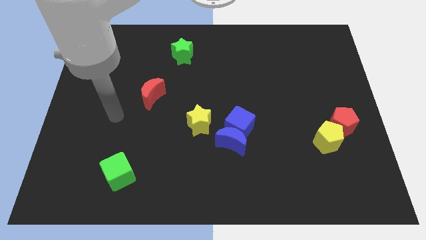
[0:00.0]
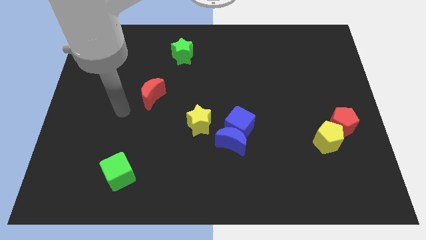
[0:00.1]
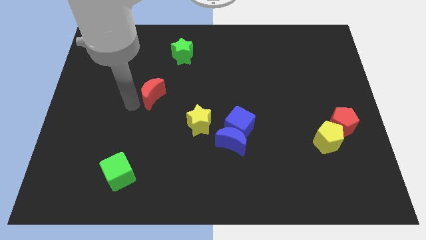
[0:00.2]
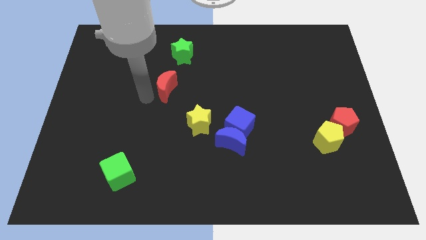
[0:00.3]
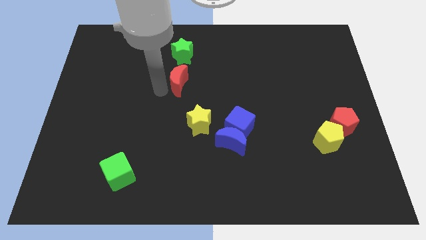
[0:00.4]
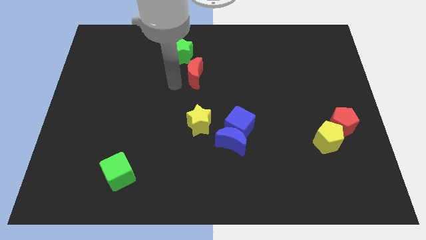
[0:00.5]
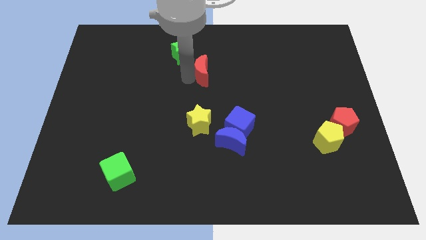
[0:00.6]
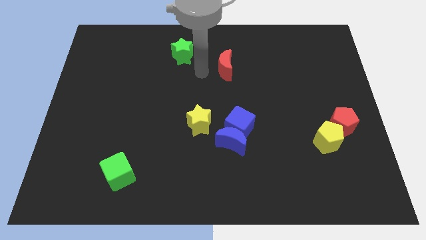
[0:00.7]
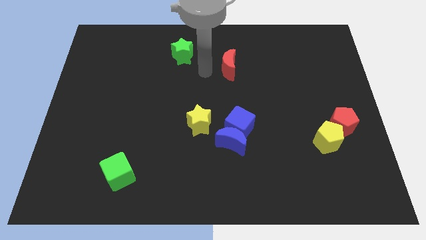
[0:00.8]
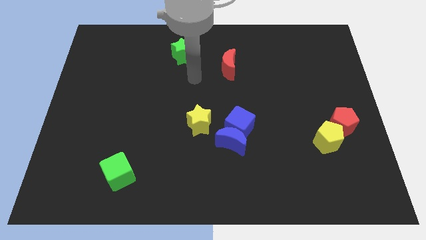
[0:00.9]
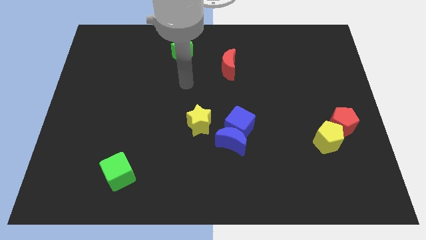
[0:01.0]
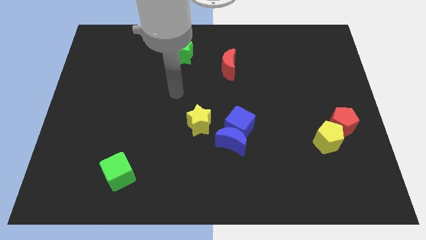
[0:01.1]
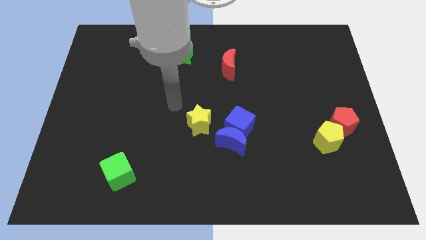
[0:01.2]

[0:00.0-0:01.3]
move the red crescent to the top of the blue cube

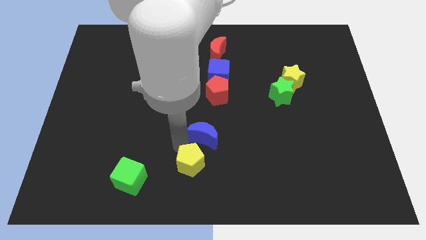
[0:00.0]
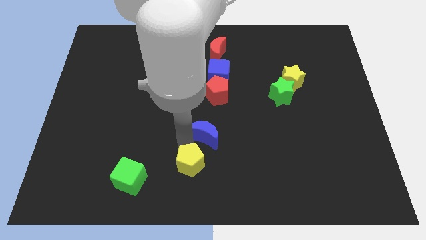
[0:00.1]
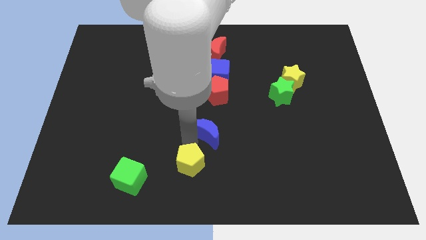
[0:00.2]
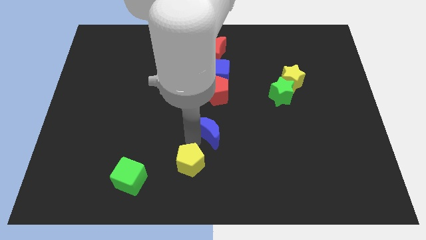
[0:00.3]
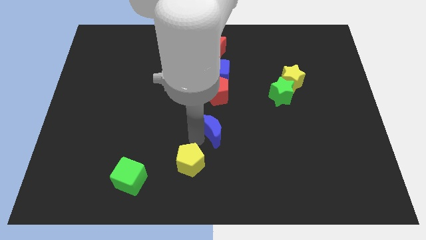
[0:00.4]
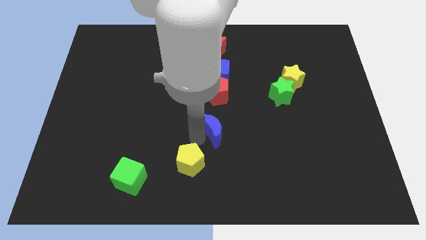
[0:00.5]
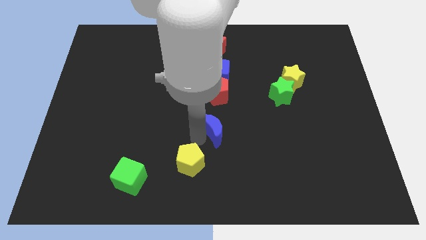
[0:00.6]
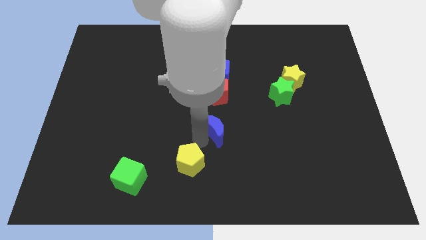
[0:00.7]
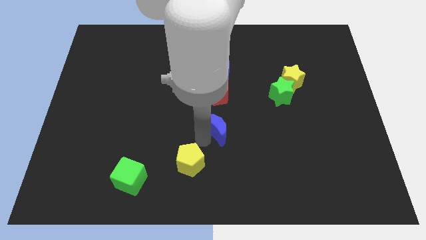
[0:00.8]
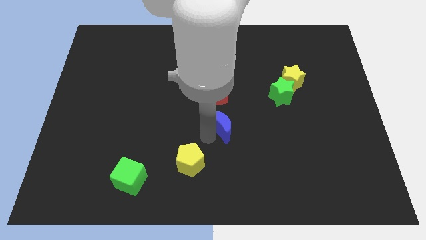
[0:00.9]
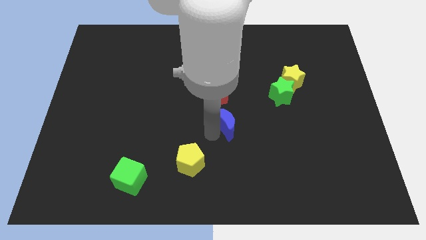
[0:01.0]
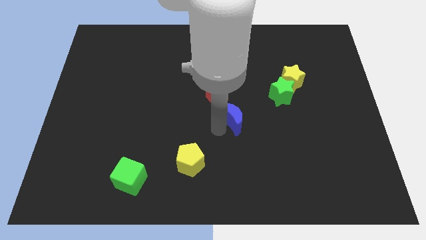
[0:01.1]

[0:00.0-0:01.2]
move the blue moon below the red pentagon

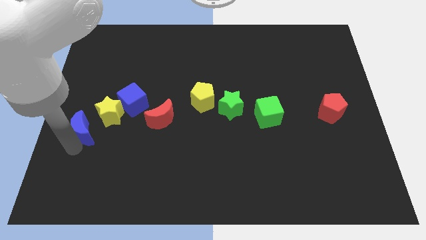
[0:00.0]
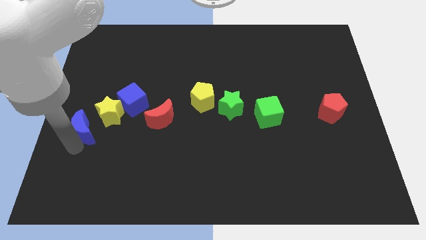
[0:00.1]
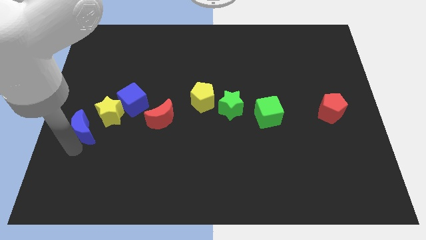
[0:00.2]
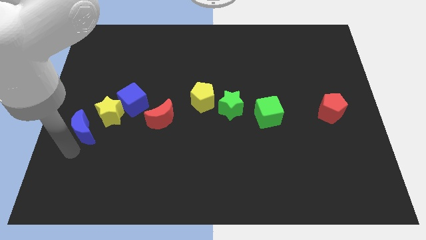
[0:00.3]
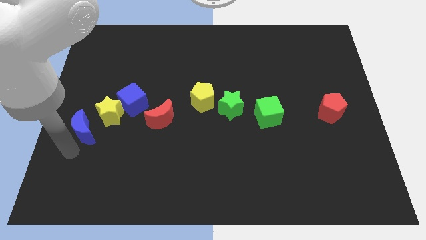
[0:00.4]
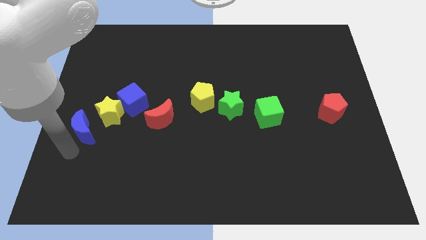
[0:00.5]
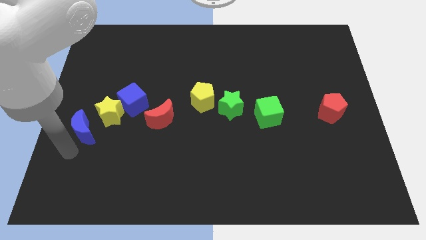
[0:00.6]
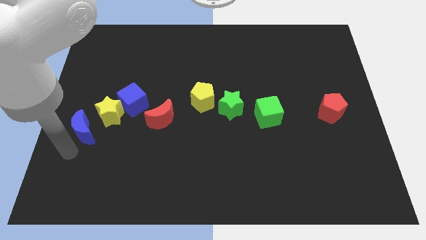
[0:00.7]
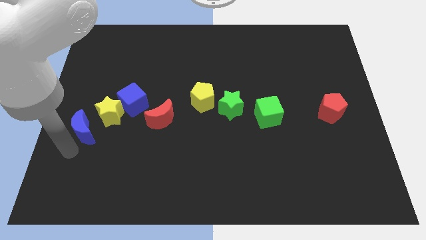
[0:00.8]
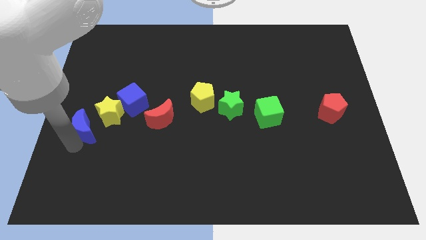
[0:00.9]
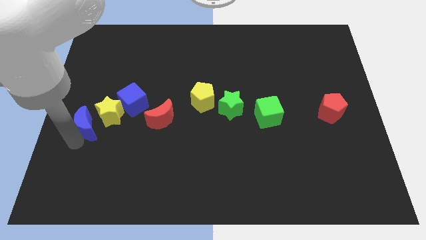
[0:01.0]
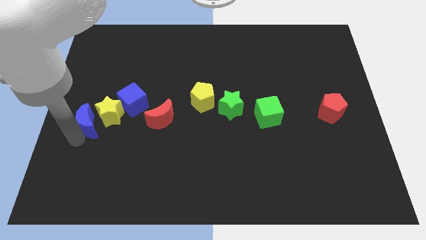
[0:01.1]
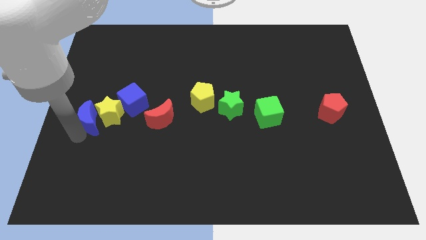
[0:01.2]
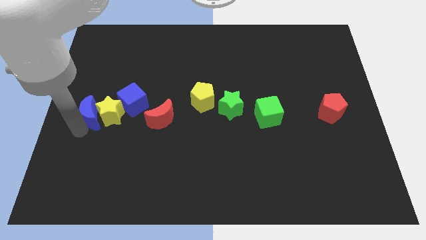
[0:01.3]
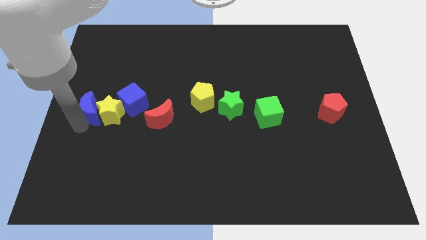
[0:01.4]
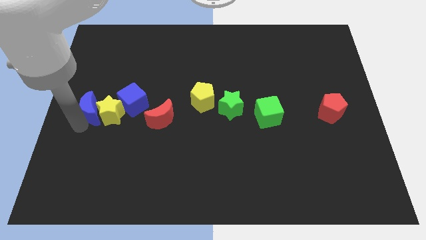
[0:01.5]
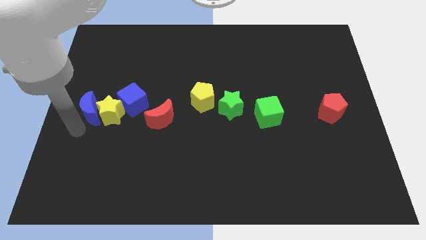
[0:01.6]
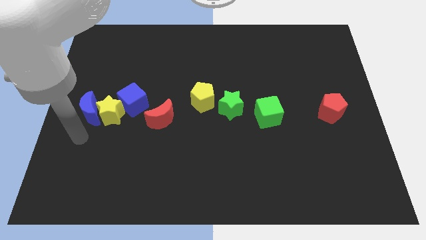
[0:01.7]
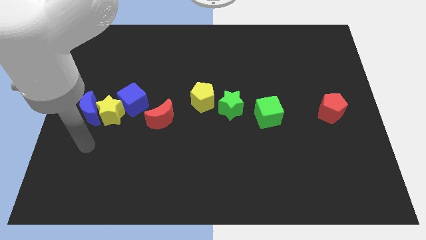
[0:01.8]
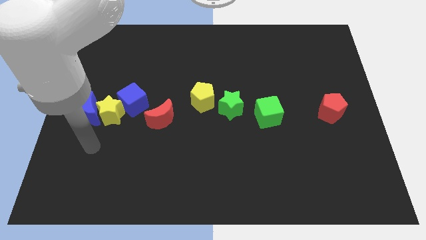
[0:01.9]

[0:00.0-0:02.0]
put the blue moon left to the yellow star

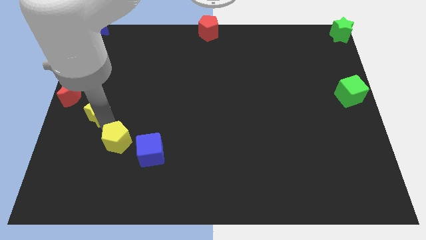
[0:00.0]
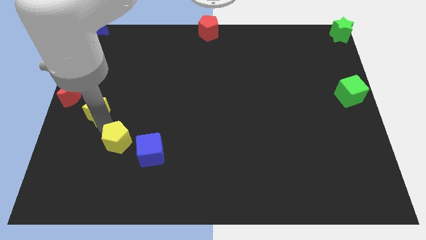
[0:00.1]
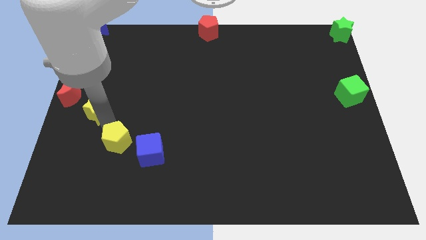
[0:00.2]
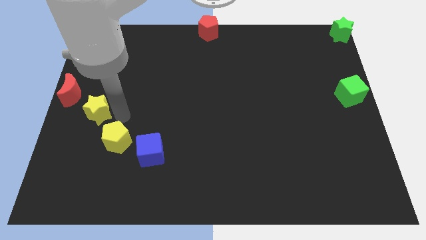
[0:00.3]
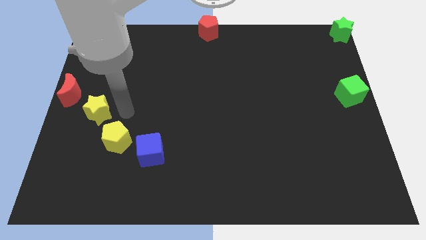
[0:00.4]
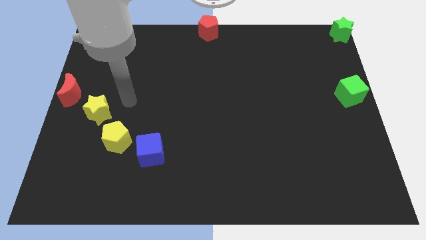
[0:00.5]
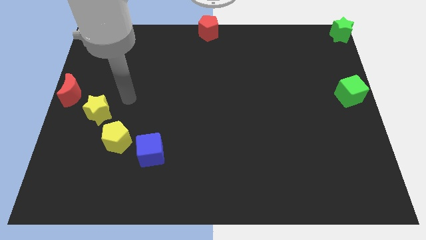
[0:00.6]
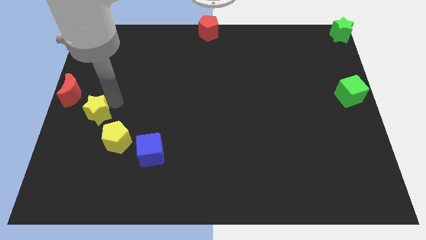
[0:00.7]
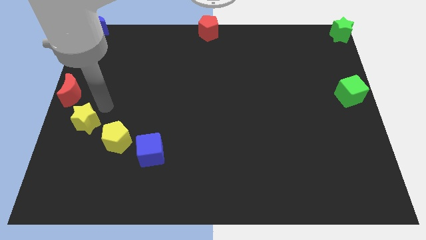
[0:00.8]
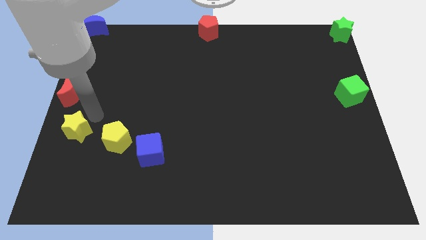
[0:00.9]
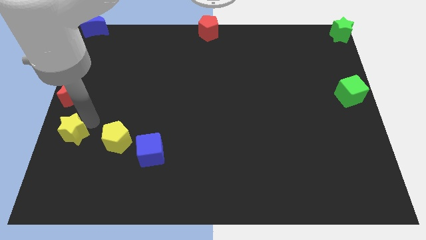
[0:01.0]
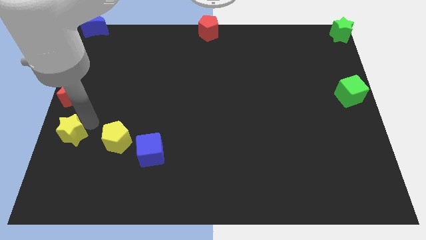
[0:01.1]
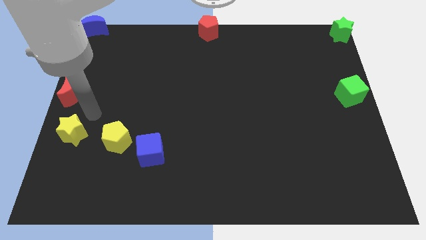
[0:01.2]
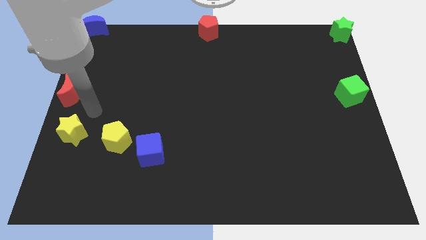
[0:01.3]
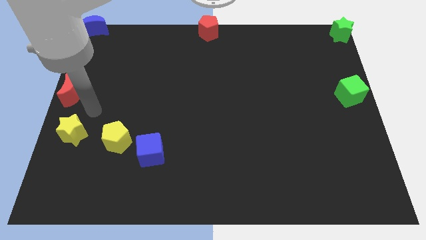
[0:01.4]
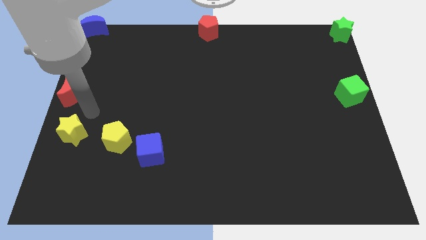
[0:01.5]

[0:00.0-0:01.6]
place the yellow star parallel to yellow pentagon

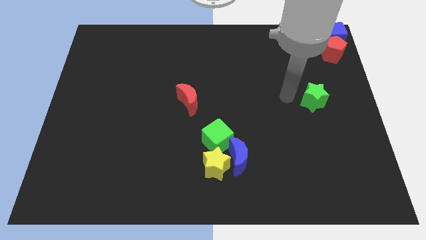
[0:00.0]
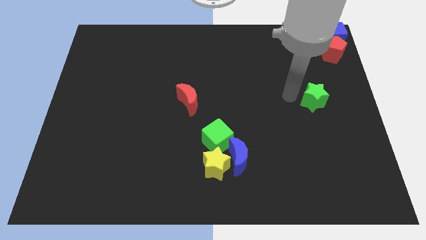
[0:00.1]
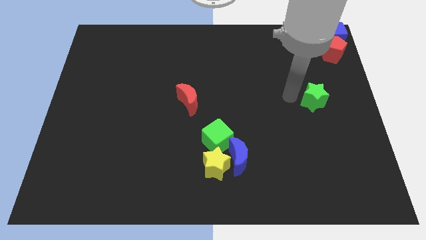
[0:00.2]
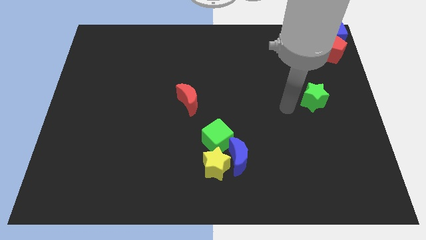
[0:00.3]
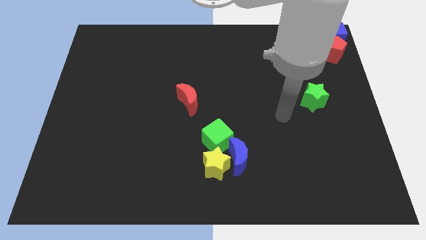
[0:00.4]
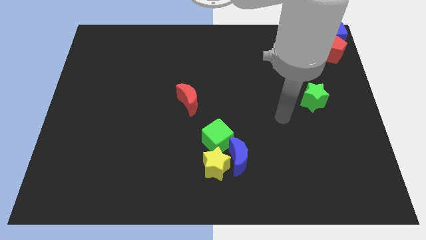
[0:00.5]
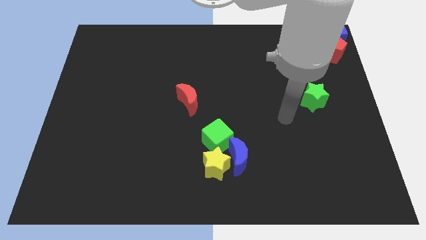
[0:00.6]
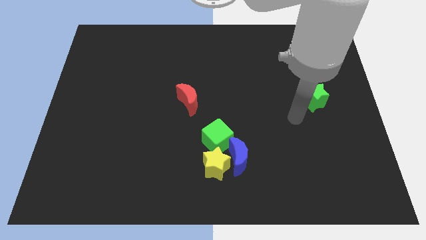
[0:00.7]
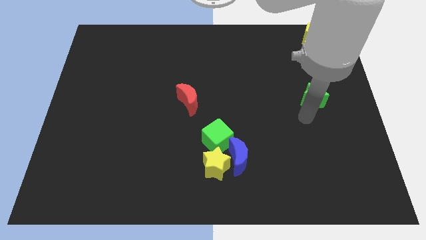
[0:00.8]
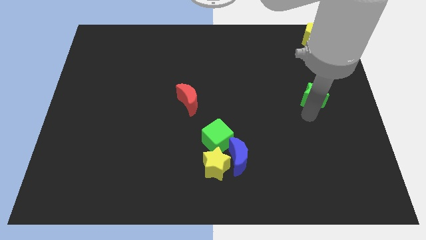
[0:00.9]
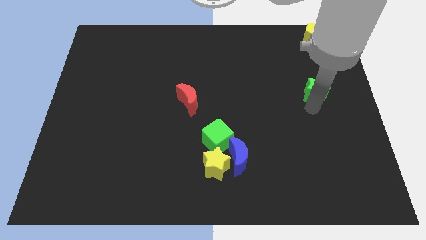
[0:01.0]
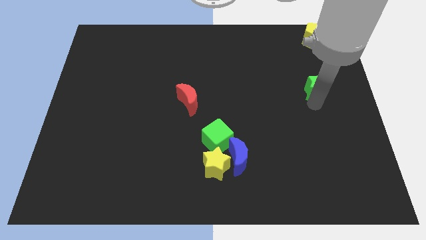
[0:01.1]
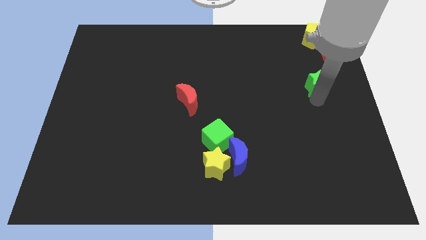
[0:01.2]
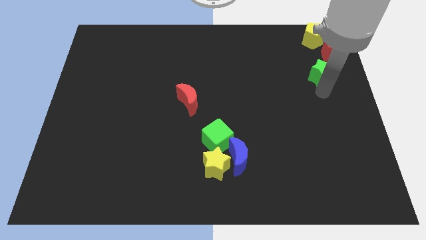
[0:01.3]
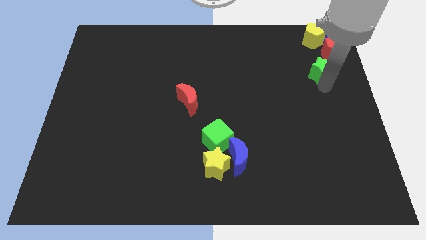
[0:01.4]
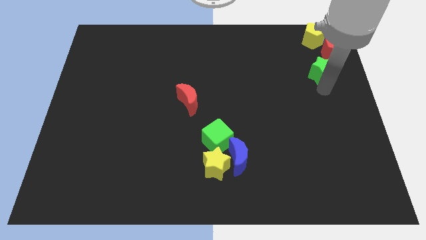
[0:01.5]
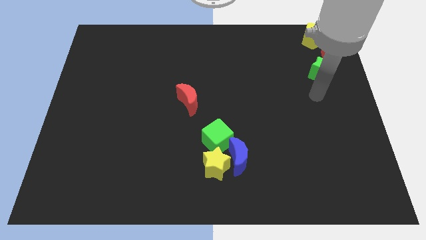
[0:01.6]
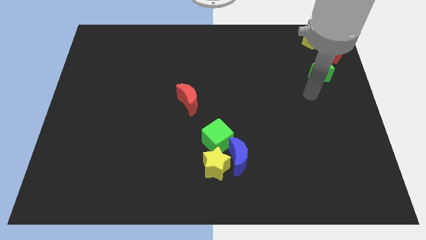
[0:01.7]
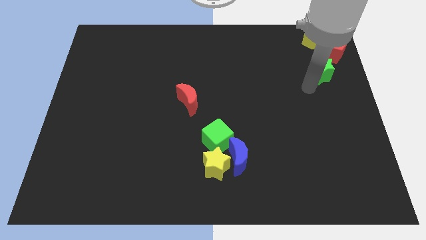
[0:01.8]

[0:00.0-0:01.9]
push the green star towards the red pentagon

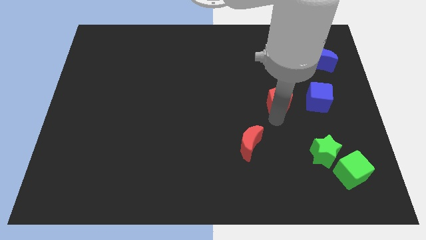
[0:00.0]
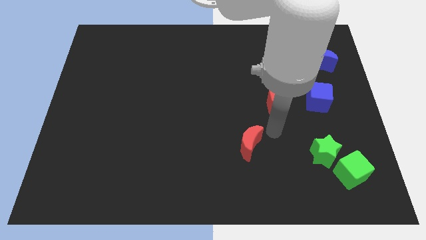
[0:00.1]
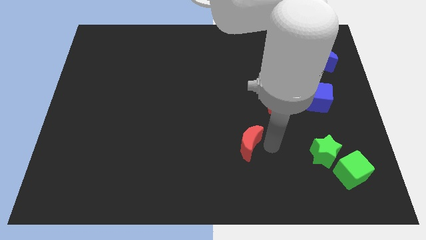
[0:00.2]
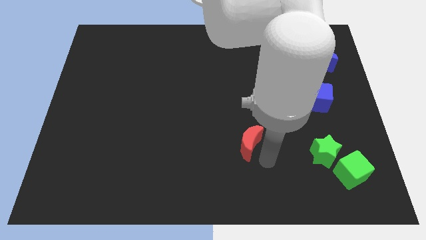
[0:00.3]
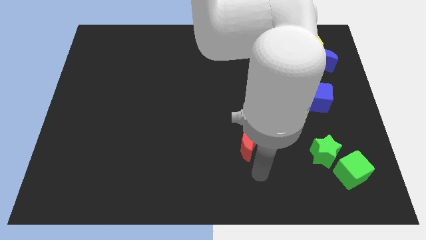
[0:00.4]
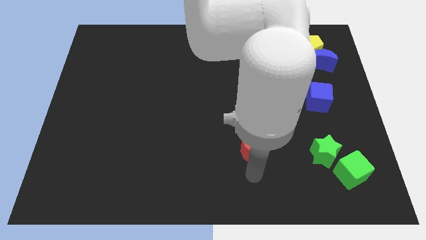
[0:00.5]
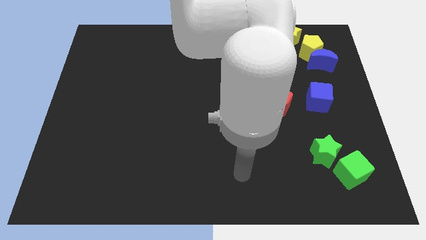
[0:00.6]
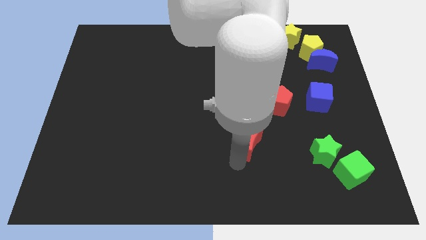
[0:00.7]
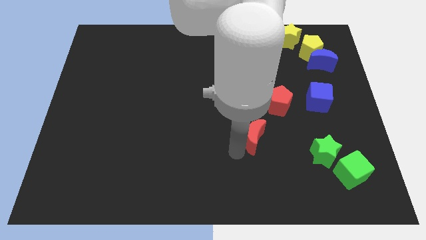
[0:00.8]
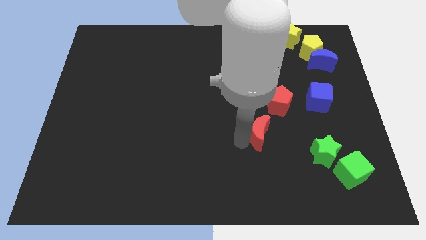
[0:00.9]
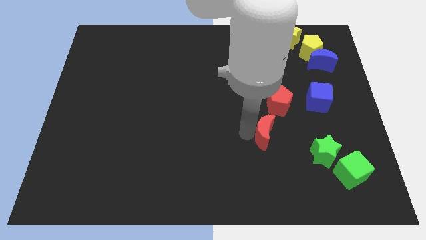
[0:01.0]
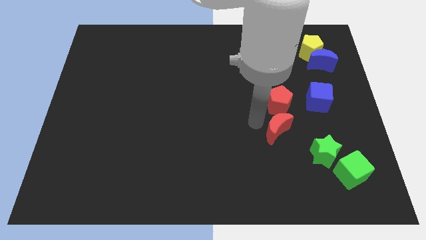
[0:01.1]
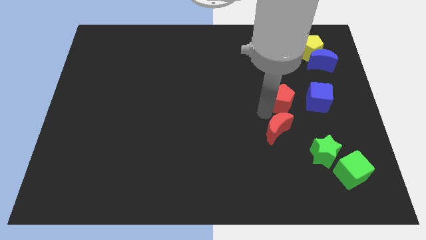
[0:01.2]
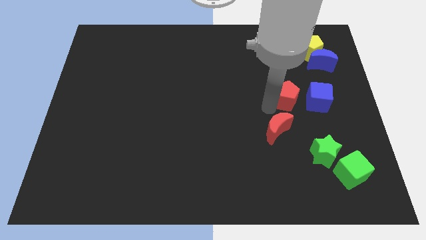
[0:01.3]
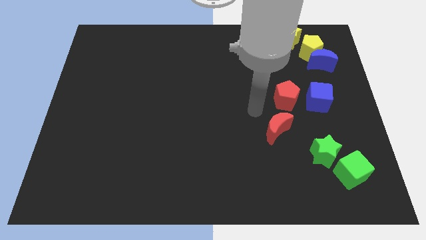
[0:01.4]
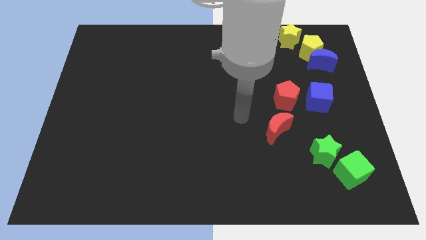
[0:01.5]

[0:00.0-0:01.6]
place the red pentagon to the left of the blue cube
